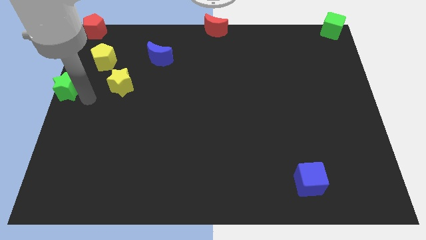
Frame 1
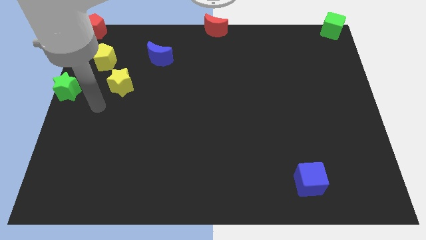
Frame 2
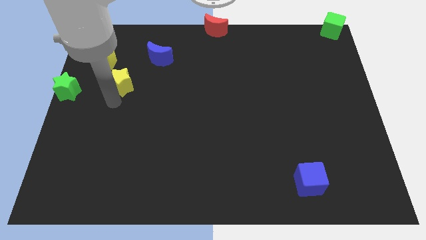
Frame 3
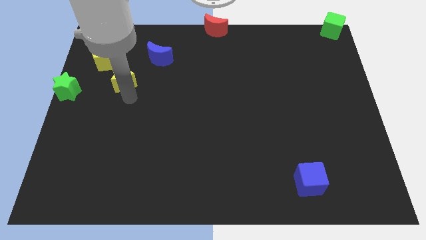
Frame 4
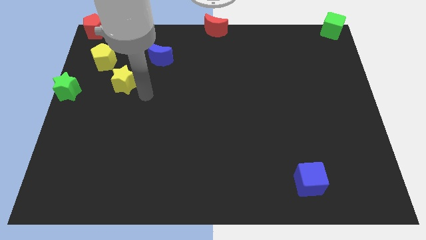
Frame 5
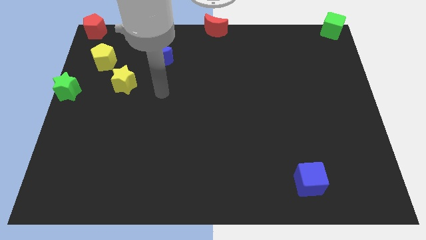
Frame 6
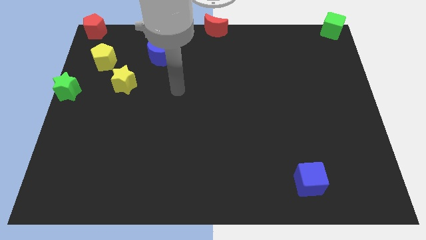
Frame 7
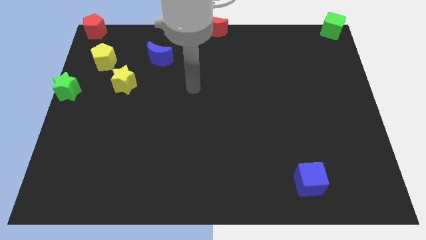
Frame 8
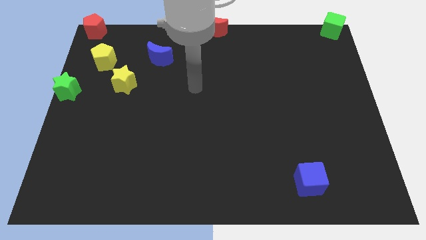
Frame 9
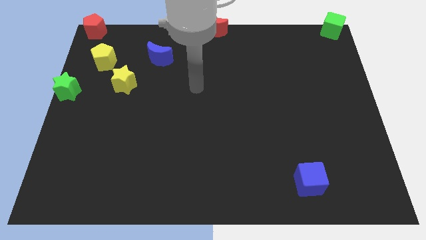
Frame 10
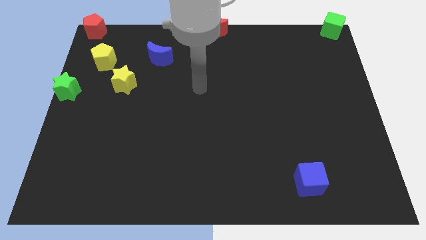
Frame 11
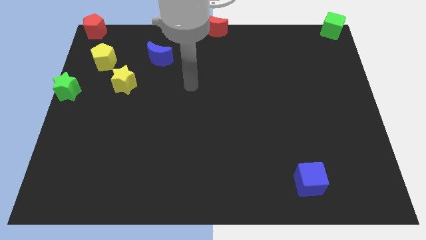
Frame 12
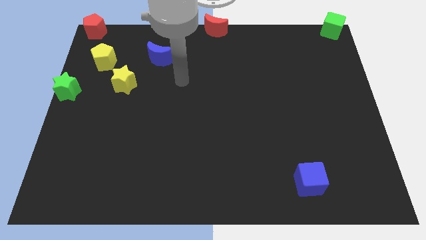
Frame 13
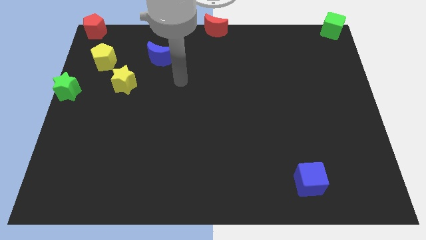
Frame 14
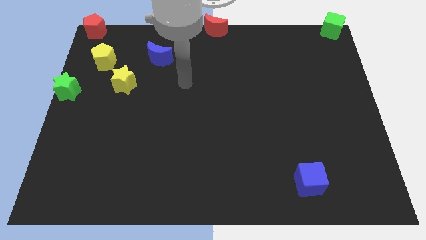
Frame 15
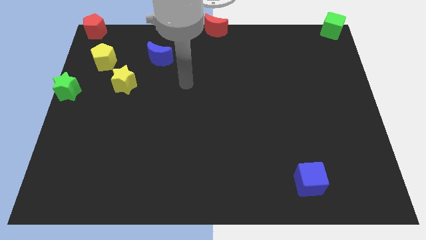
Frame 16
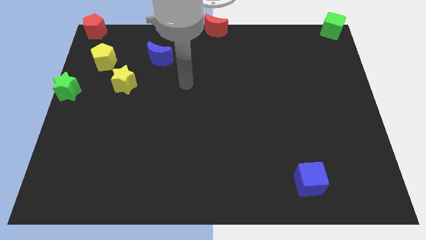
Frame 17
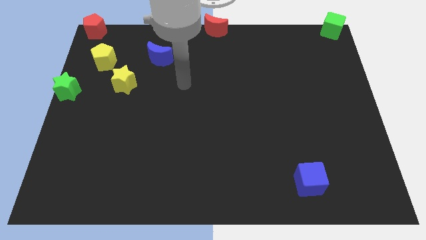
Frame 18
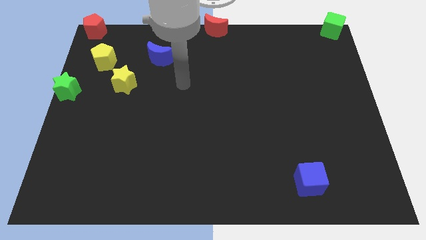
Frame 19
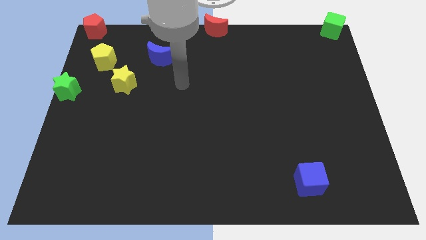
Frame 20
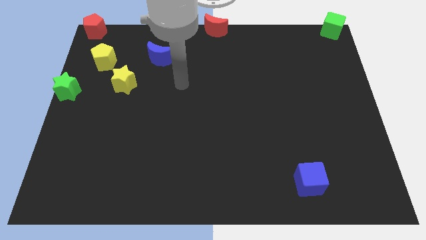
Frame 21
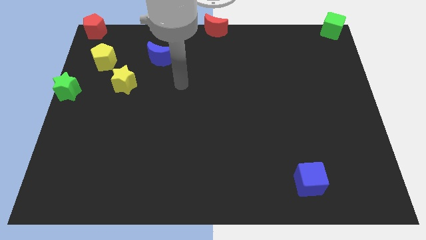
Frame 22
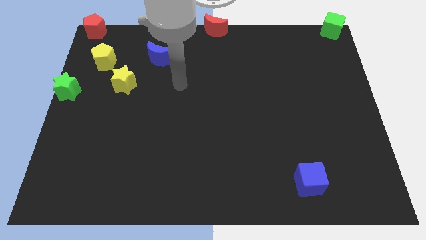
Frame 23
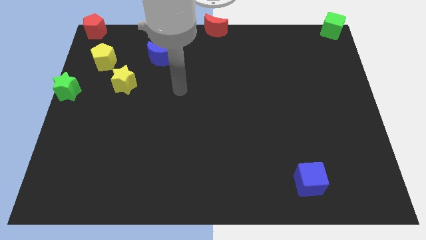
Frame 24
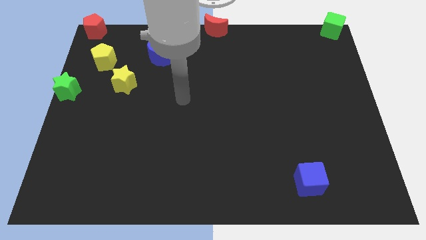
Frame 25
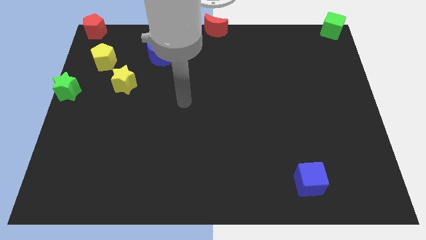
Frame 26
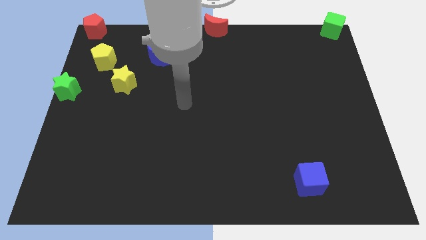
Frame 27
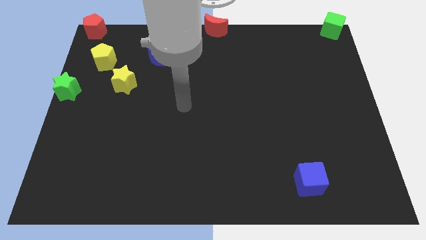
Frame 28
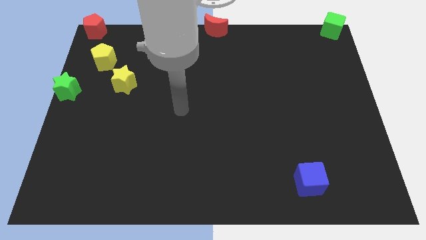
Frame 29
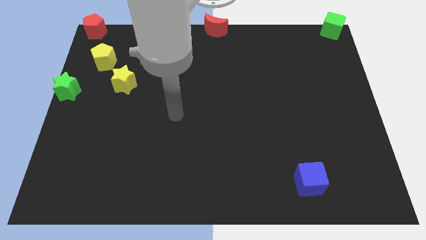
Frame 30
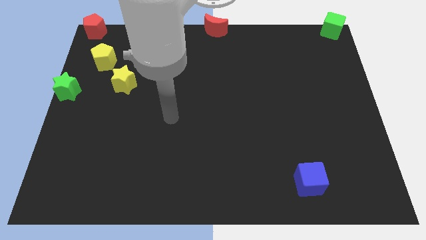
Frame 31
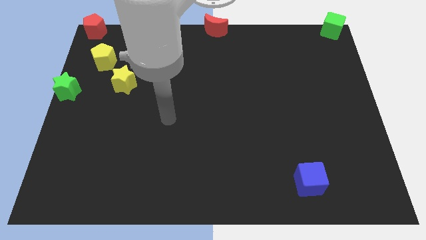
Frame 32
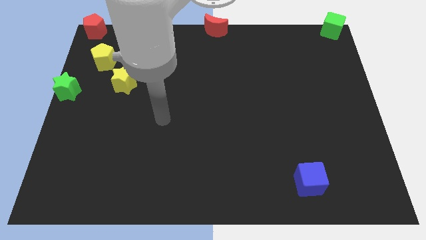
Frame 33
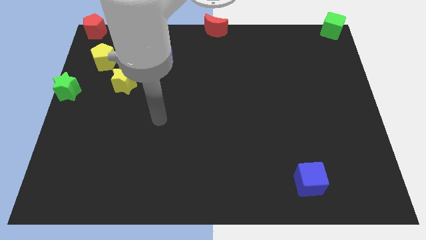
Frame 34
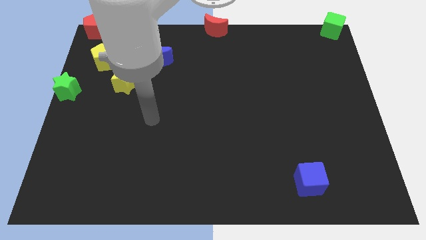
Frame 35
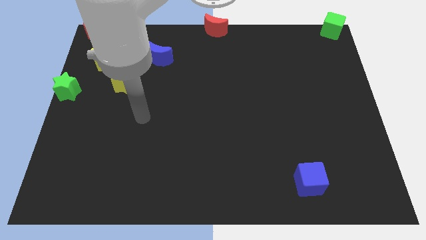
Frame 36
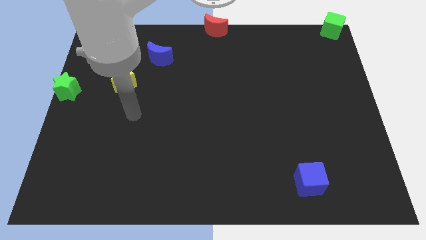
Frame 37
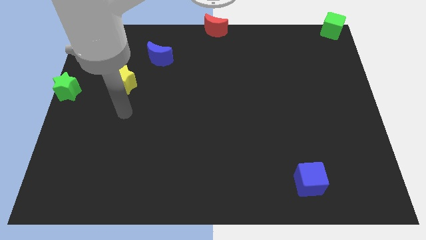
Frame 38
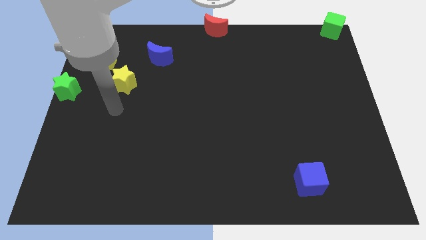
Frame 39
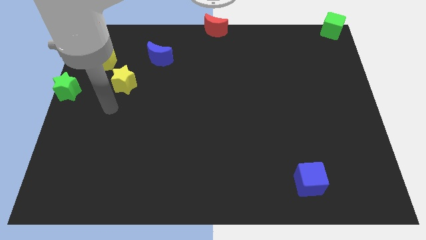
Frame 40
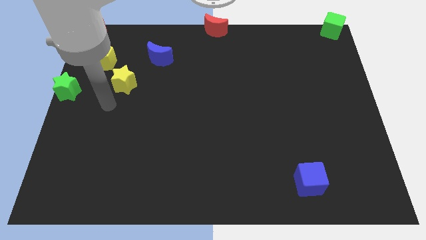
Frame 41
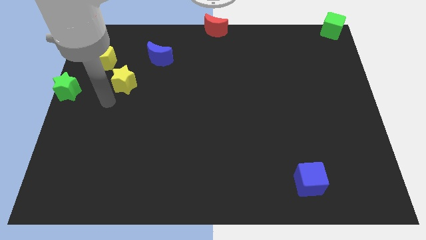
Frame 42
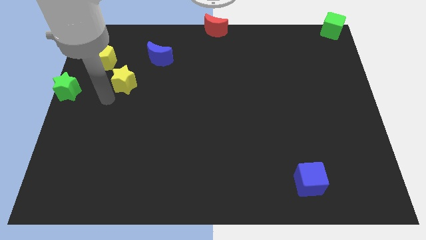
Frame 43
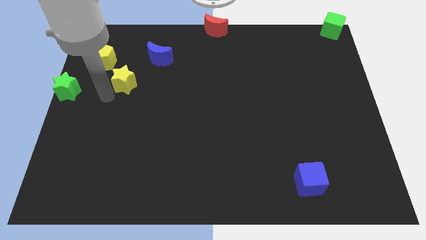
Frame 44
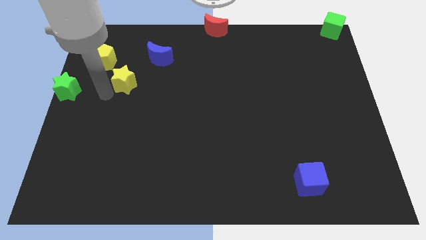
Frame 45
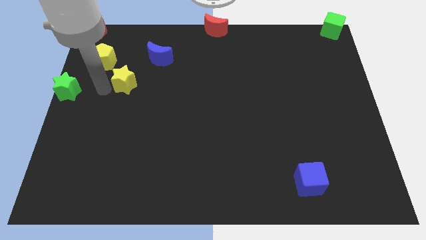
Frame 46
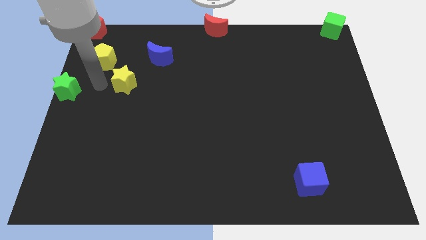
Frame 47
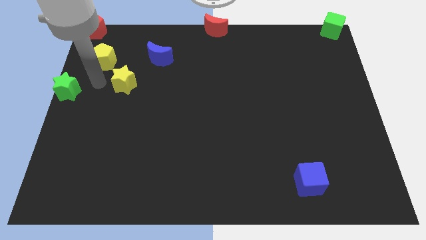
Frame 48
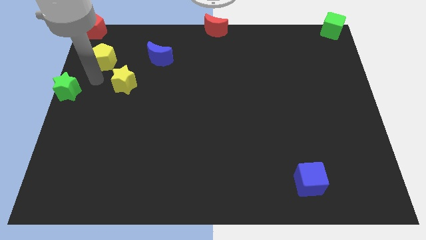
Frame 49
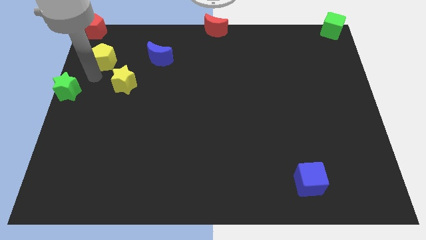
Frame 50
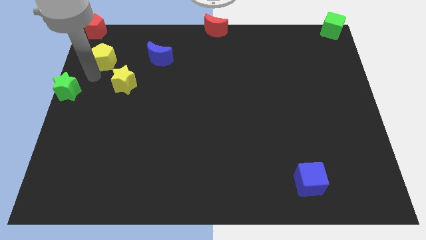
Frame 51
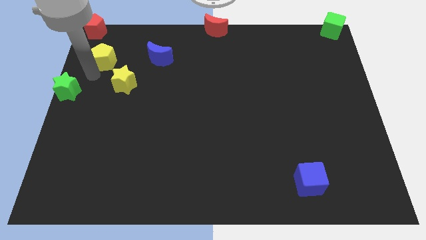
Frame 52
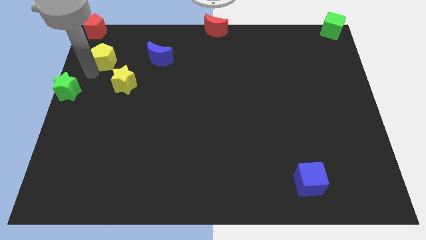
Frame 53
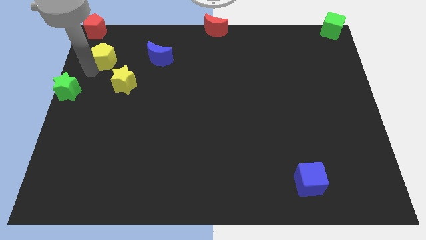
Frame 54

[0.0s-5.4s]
move your arm towards the yellow pentagon

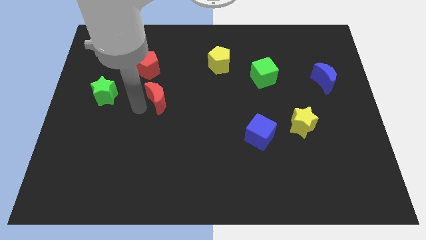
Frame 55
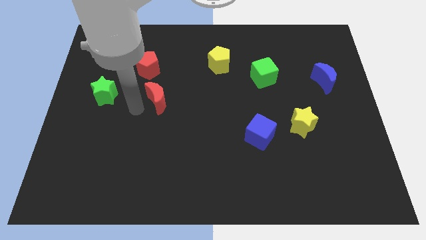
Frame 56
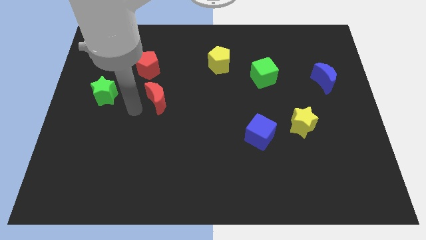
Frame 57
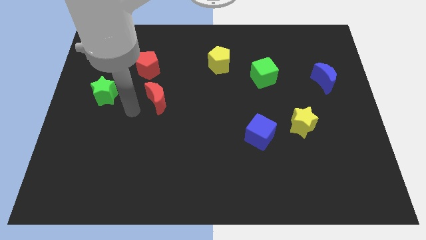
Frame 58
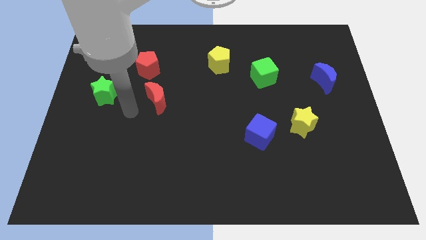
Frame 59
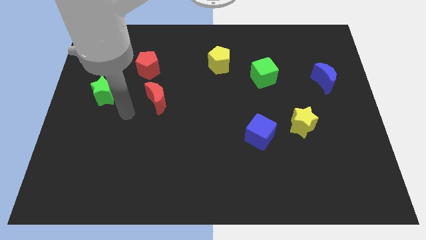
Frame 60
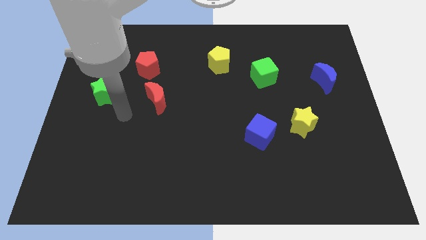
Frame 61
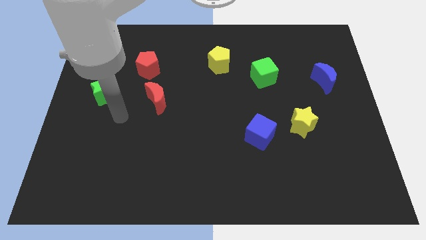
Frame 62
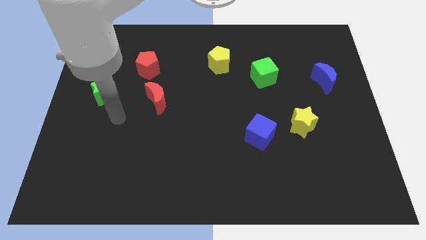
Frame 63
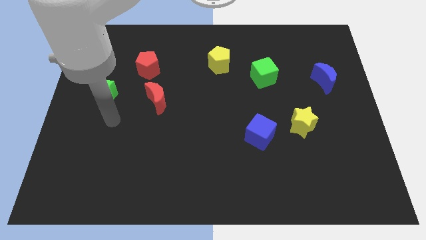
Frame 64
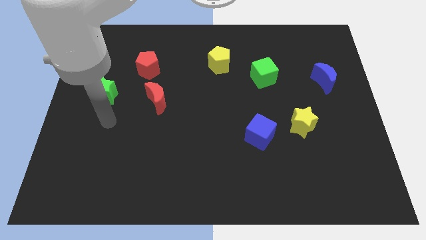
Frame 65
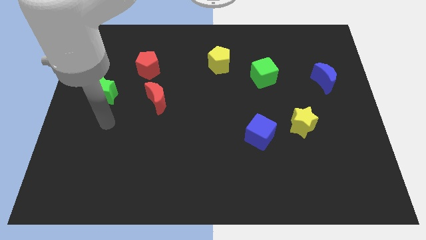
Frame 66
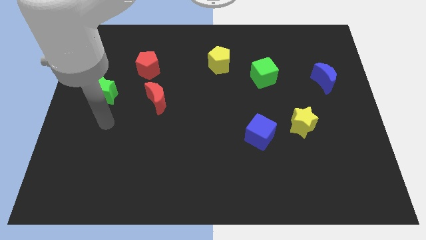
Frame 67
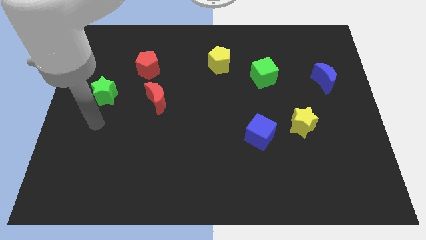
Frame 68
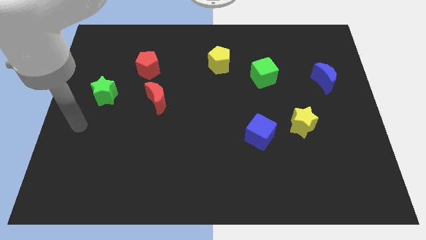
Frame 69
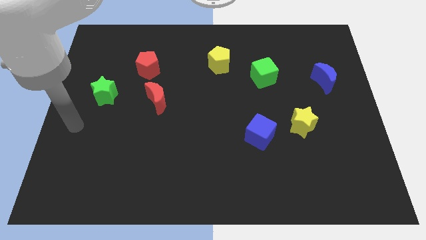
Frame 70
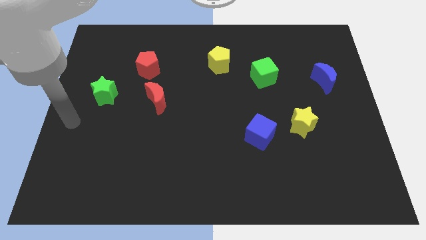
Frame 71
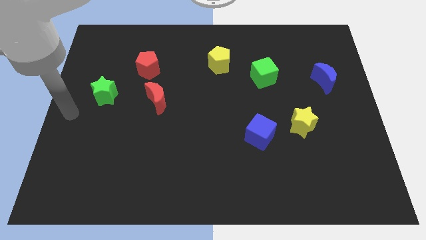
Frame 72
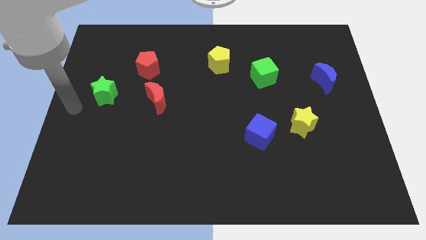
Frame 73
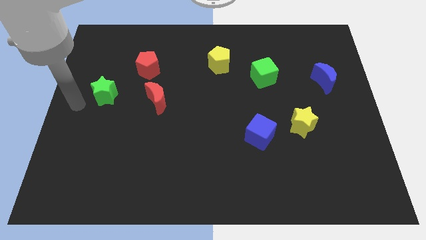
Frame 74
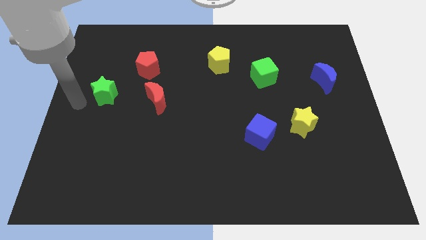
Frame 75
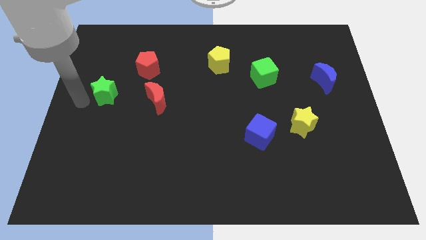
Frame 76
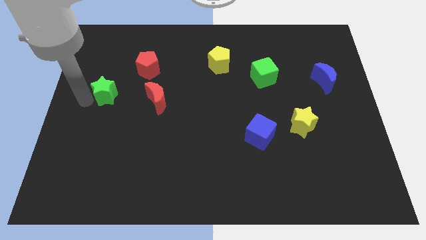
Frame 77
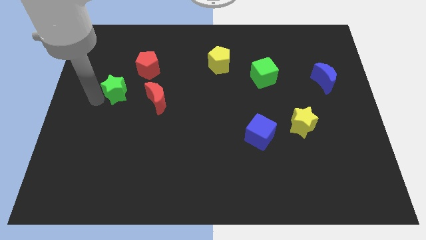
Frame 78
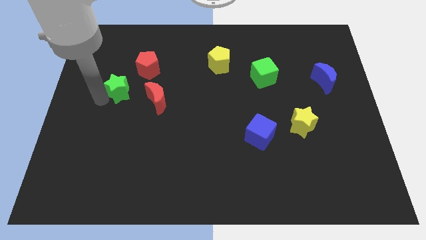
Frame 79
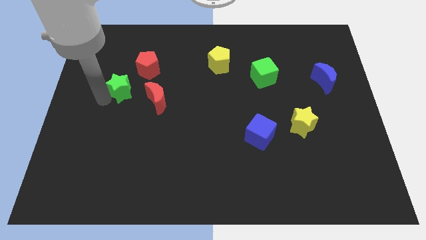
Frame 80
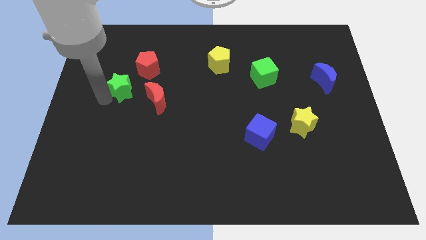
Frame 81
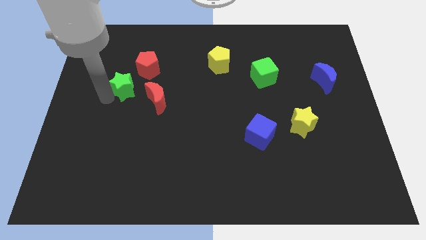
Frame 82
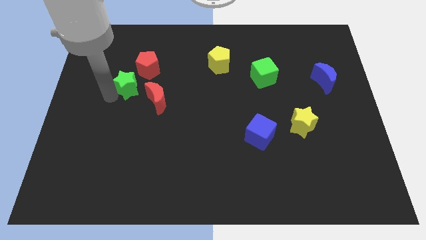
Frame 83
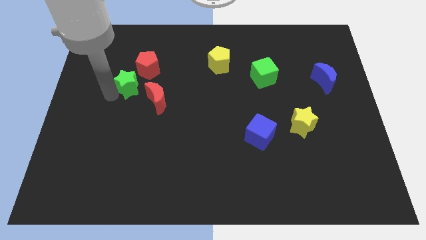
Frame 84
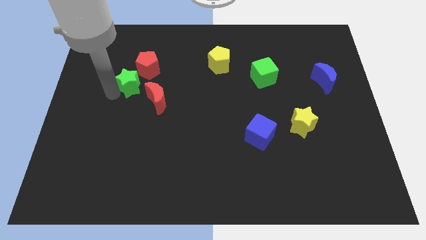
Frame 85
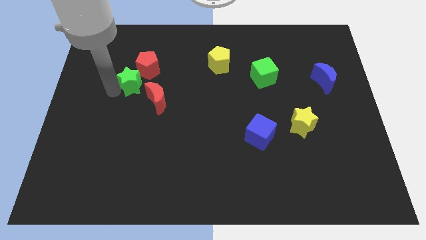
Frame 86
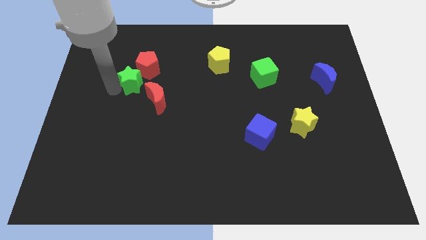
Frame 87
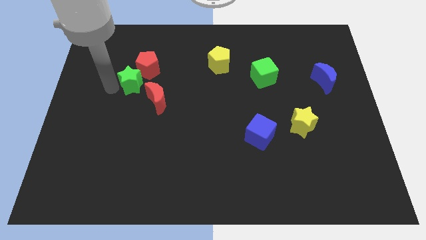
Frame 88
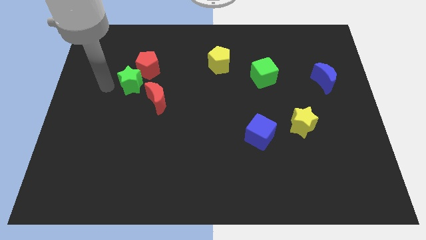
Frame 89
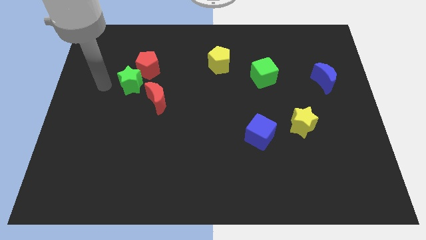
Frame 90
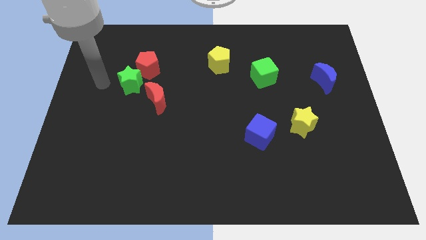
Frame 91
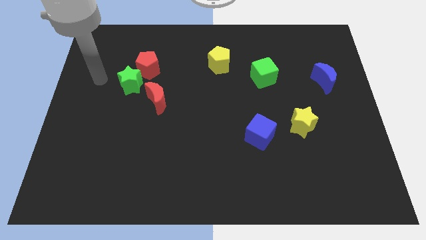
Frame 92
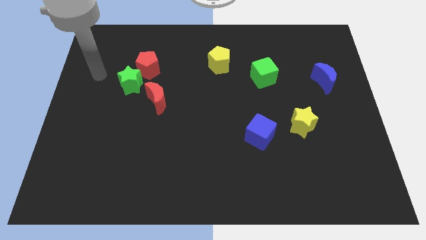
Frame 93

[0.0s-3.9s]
move the green star below left to the red pentagon
